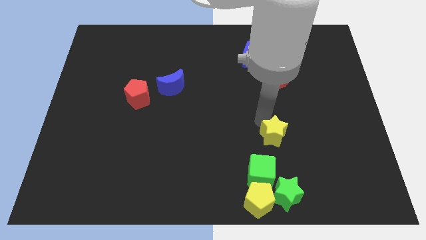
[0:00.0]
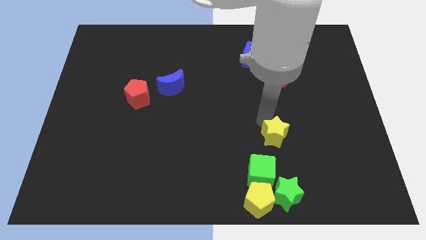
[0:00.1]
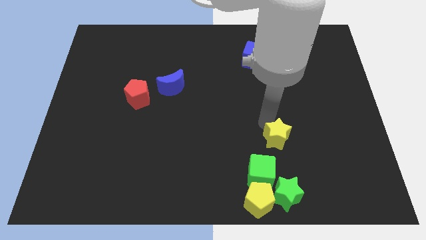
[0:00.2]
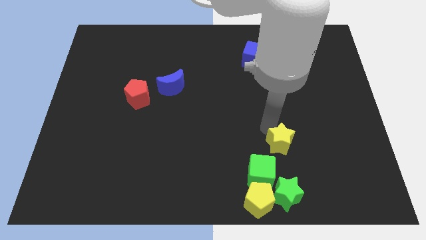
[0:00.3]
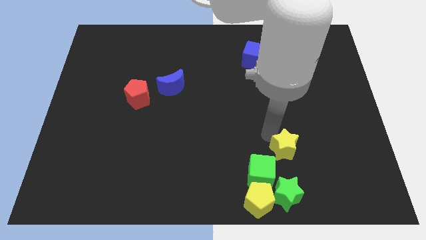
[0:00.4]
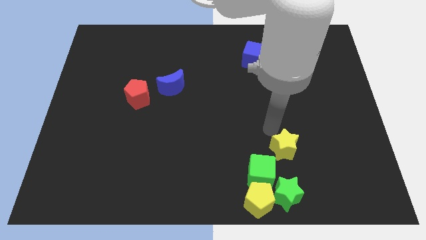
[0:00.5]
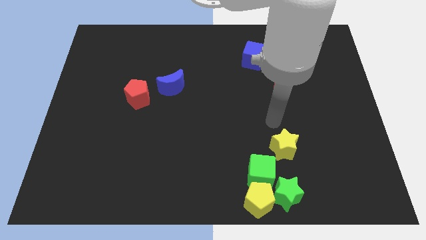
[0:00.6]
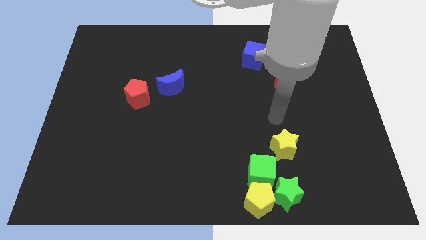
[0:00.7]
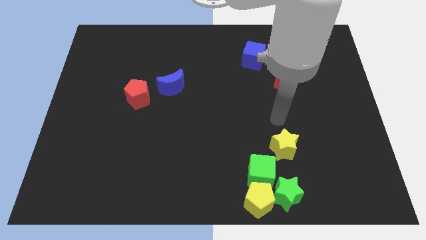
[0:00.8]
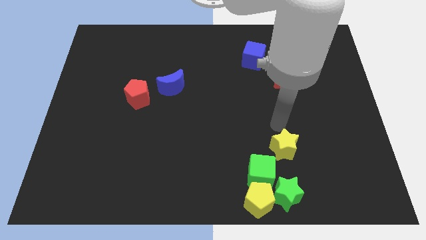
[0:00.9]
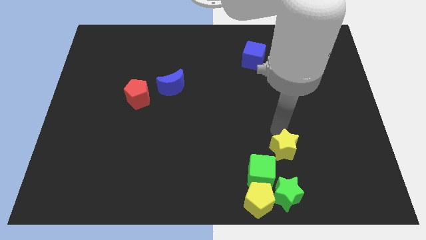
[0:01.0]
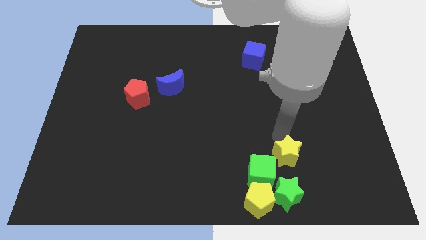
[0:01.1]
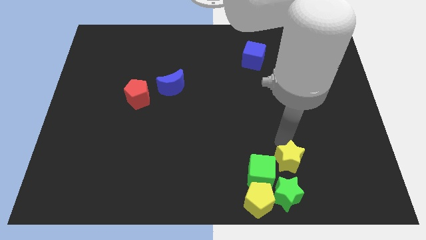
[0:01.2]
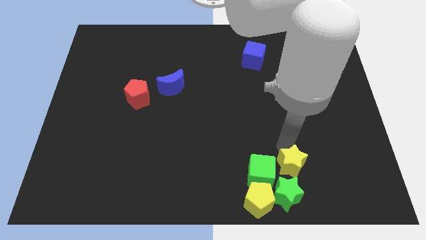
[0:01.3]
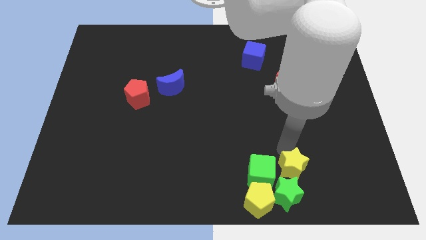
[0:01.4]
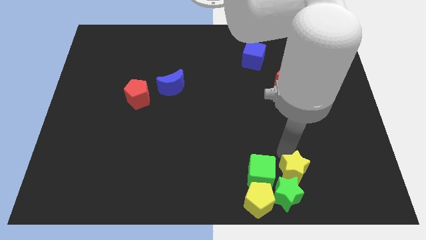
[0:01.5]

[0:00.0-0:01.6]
place the yellow star right to the green cube

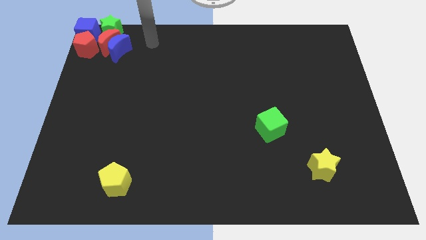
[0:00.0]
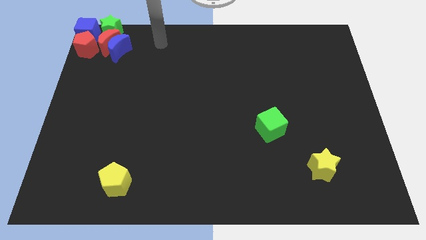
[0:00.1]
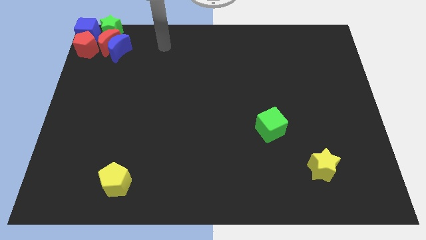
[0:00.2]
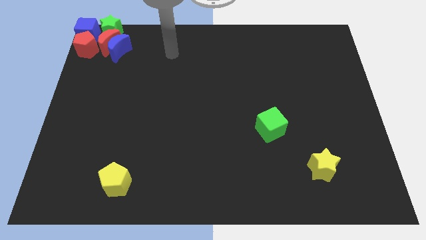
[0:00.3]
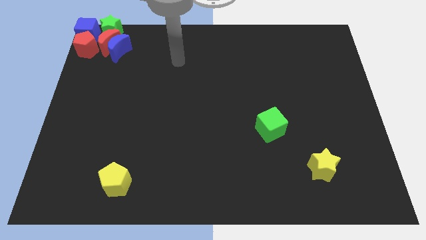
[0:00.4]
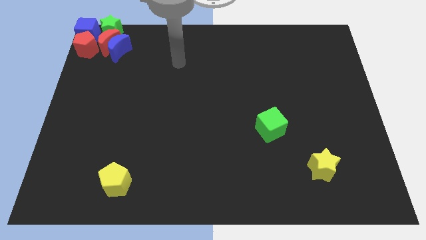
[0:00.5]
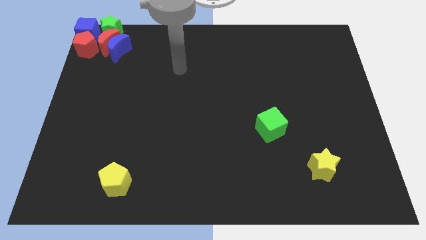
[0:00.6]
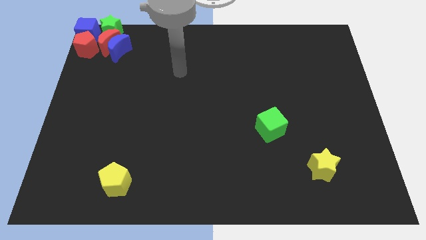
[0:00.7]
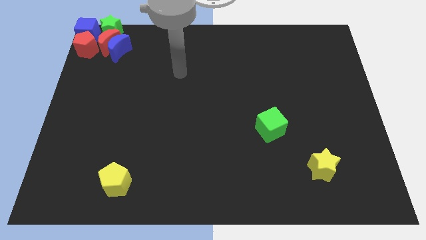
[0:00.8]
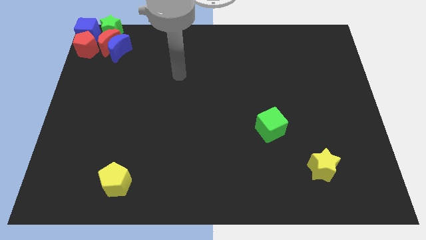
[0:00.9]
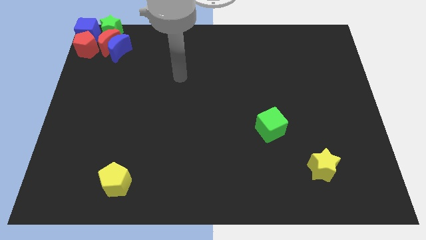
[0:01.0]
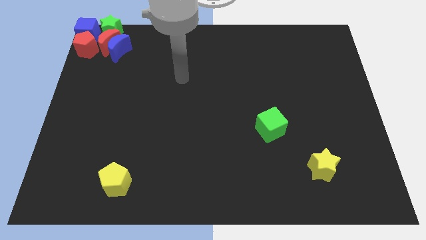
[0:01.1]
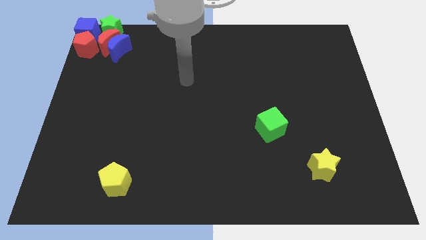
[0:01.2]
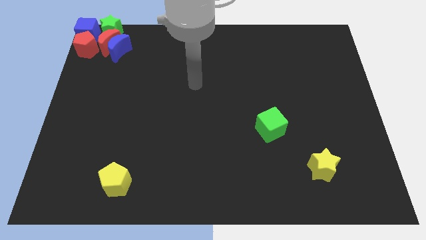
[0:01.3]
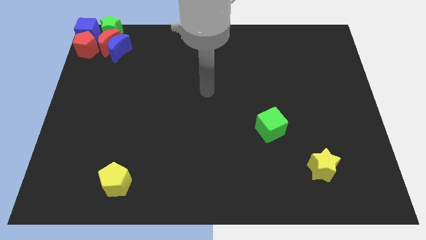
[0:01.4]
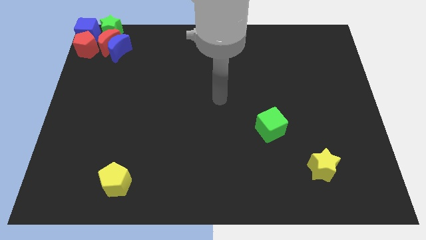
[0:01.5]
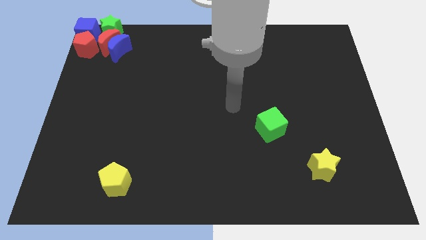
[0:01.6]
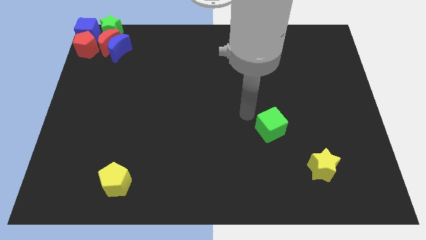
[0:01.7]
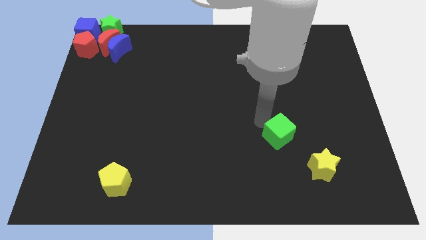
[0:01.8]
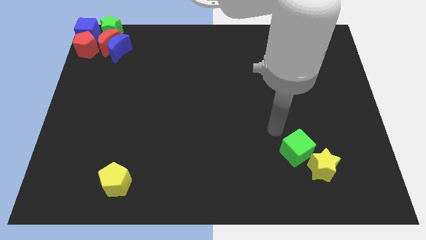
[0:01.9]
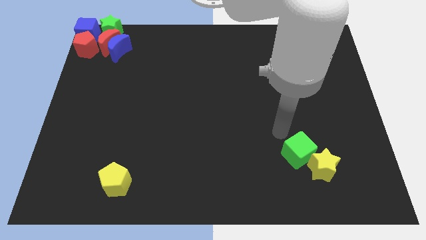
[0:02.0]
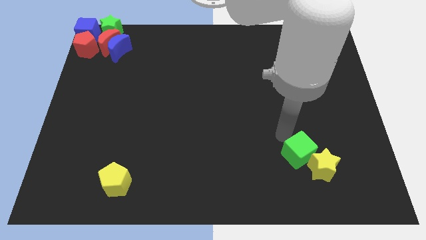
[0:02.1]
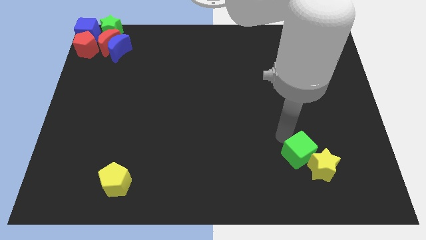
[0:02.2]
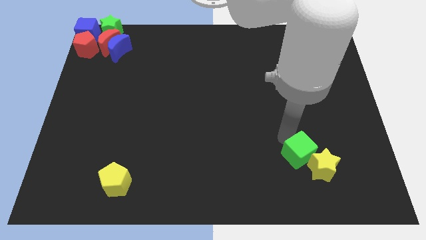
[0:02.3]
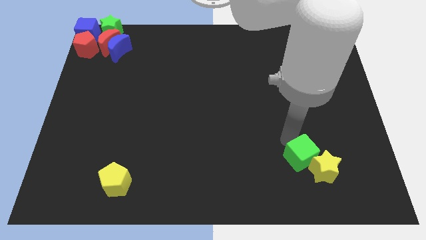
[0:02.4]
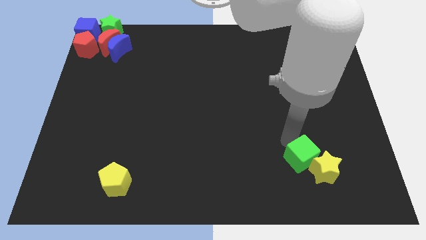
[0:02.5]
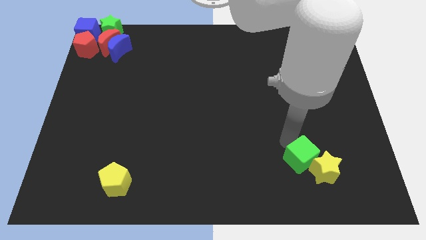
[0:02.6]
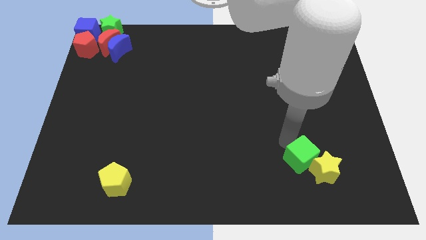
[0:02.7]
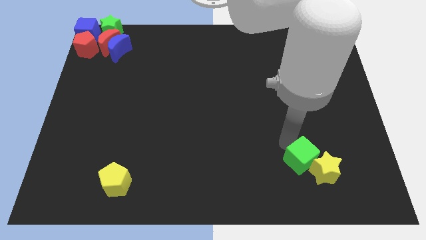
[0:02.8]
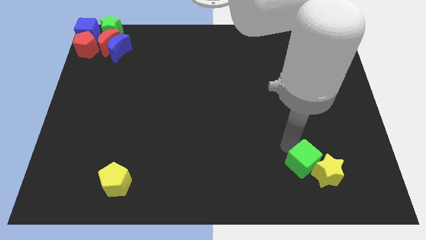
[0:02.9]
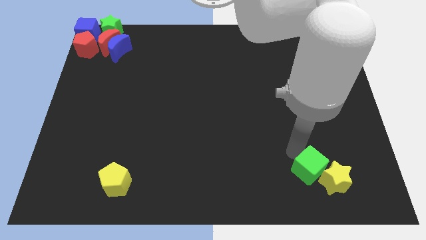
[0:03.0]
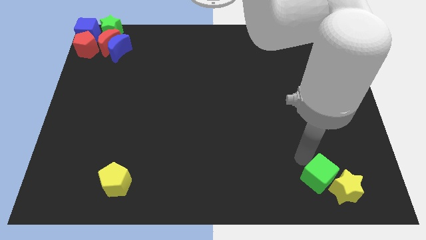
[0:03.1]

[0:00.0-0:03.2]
slide the green cube into the yellow star

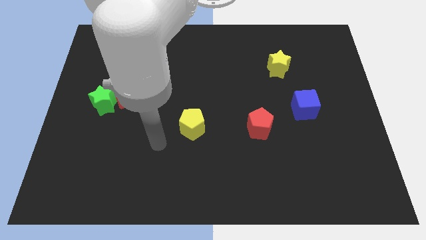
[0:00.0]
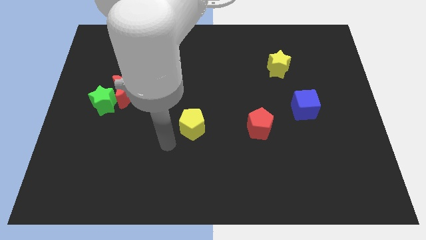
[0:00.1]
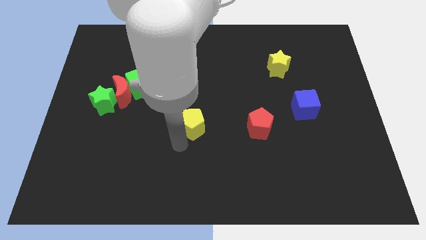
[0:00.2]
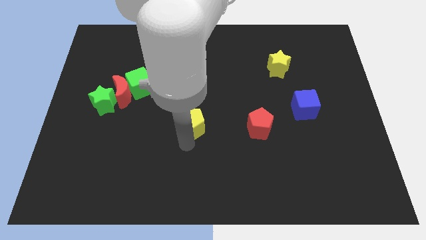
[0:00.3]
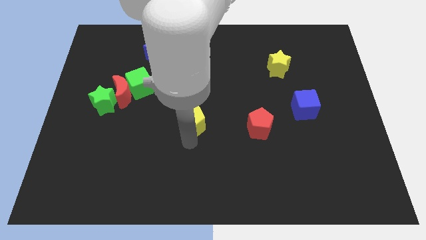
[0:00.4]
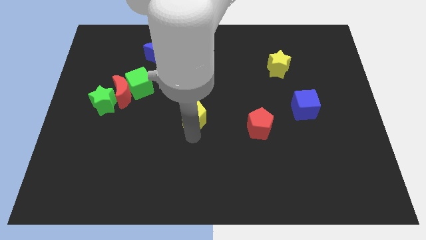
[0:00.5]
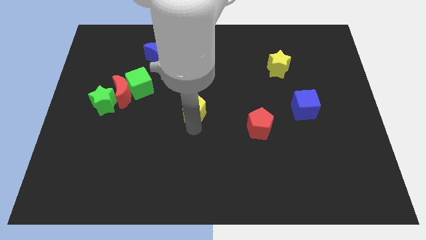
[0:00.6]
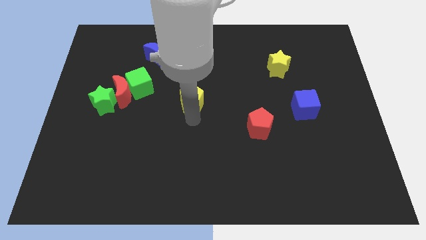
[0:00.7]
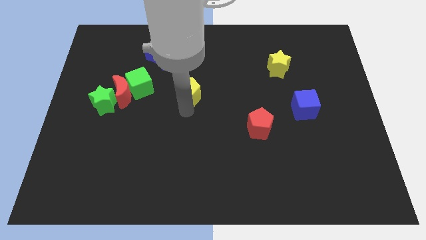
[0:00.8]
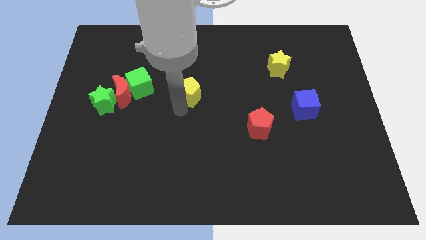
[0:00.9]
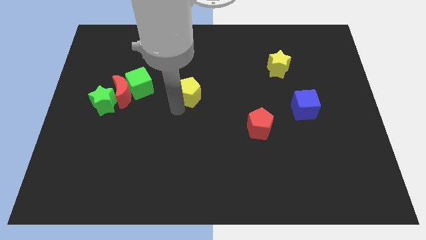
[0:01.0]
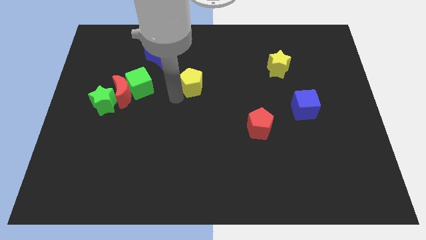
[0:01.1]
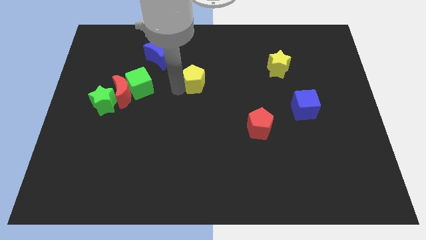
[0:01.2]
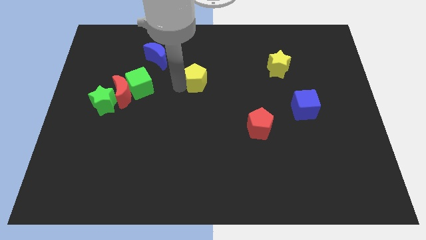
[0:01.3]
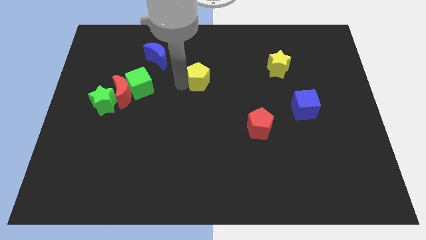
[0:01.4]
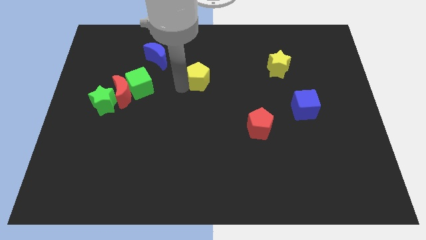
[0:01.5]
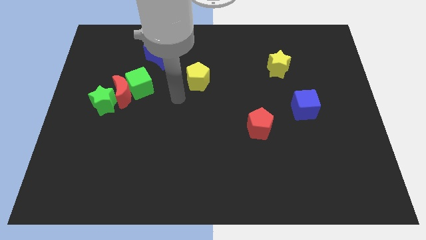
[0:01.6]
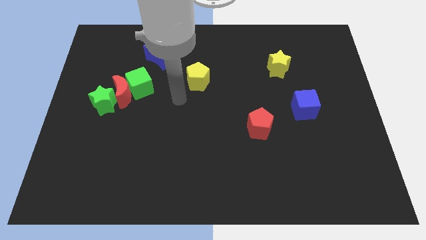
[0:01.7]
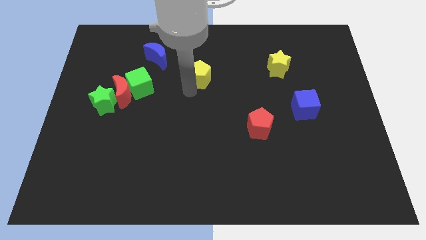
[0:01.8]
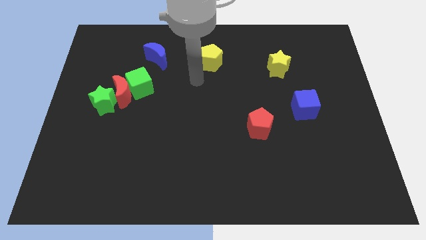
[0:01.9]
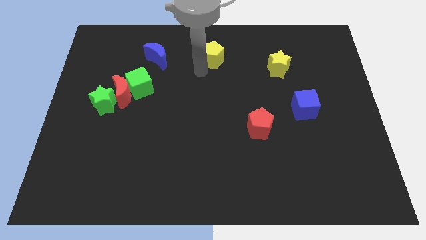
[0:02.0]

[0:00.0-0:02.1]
move the yellow pentagon towards top center

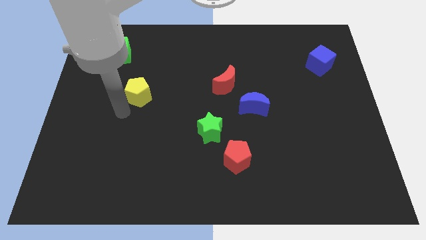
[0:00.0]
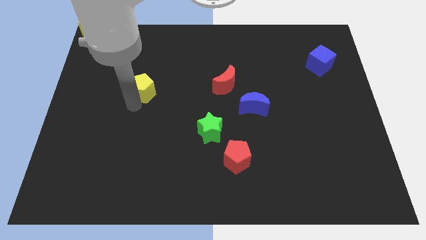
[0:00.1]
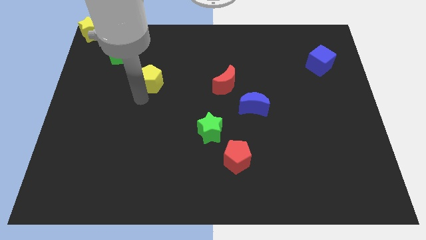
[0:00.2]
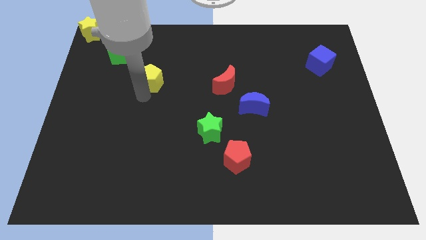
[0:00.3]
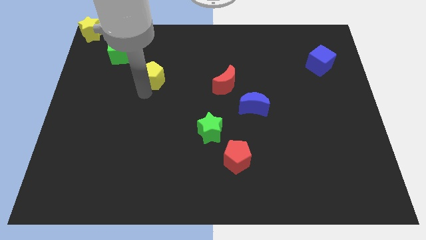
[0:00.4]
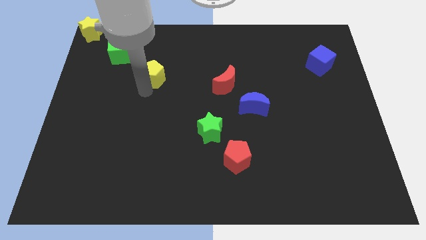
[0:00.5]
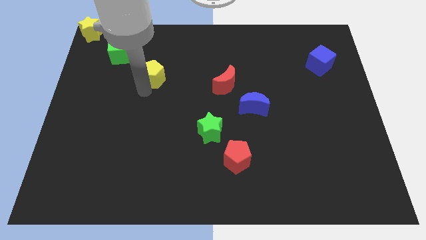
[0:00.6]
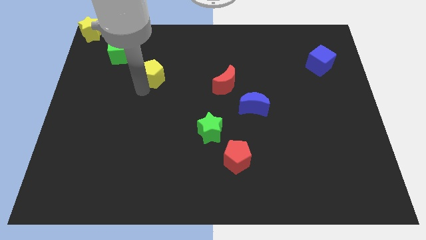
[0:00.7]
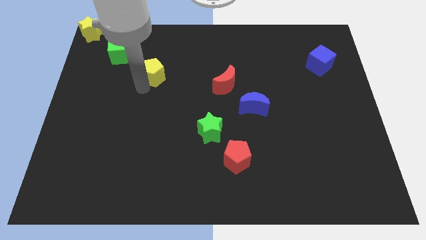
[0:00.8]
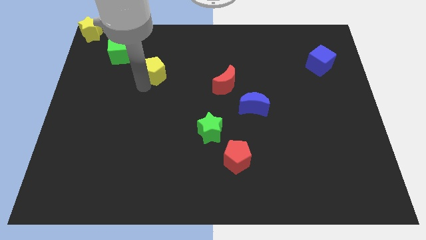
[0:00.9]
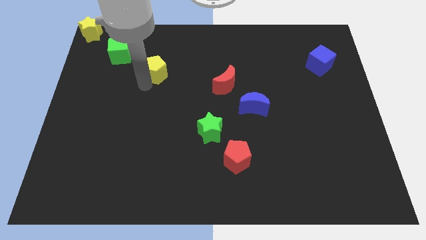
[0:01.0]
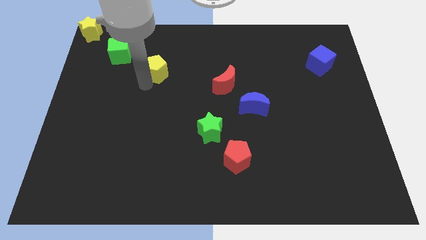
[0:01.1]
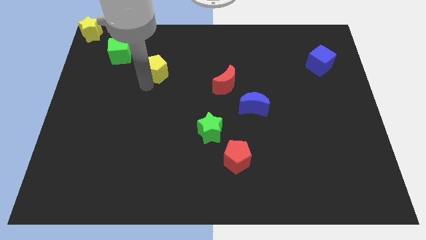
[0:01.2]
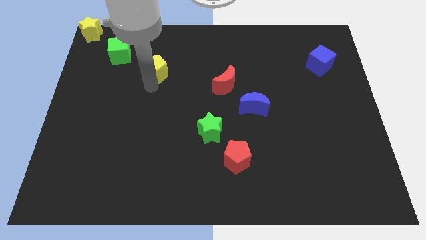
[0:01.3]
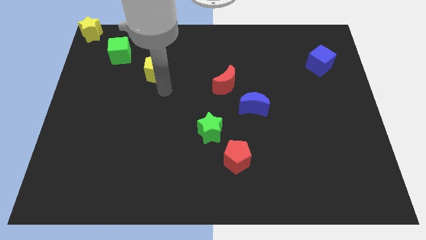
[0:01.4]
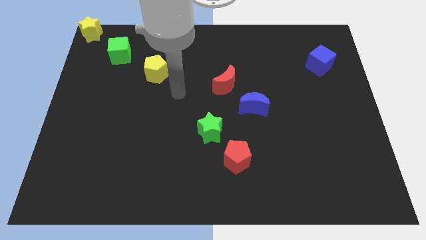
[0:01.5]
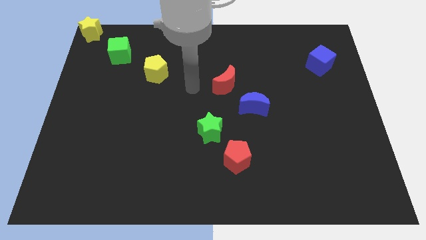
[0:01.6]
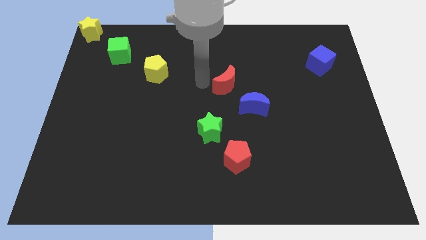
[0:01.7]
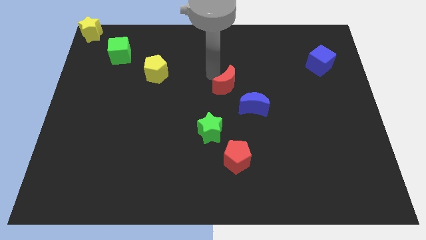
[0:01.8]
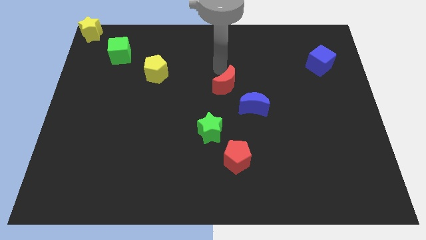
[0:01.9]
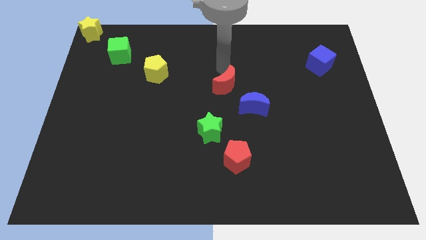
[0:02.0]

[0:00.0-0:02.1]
place yellow pentagon to the bottom right of green cube
